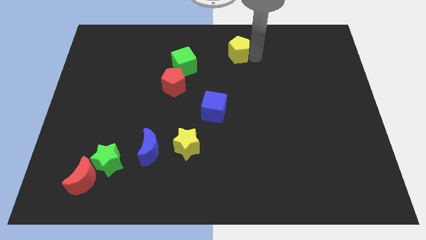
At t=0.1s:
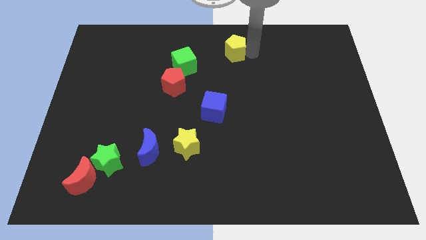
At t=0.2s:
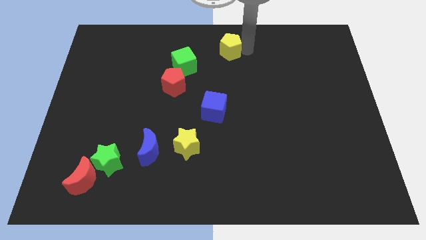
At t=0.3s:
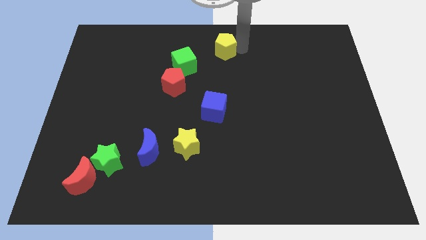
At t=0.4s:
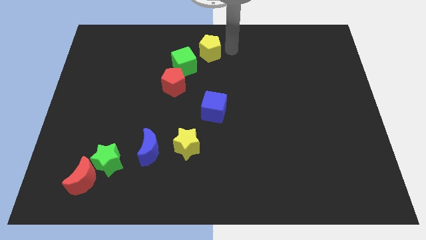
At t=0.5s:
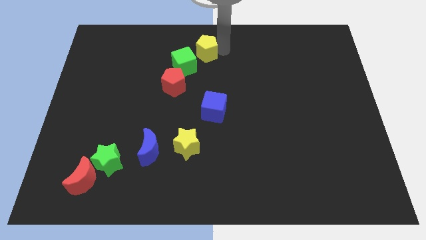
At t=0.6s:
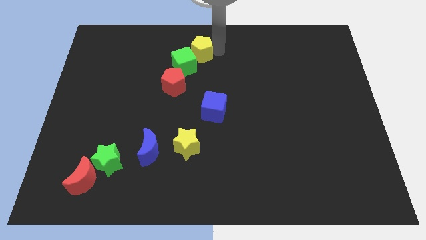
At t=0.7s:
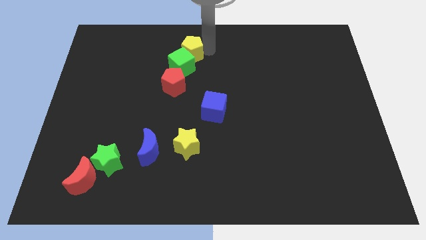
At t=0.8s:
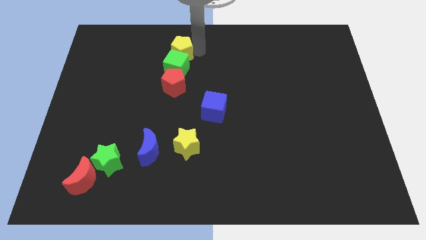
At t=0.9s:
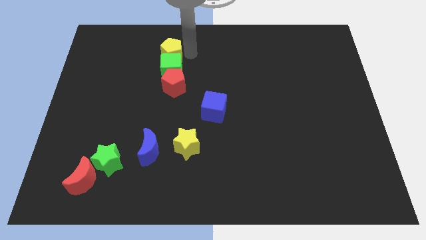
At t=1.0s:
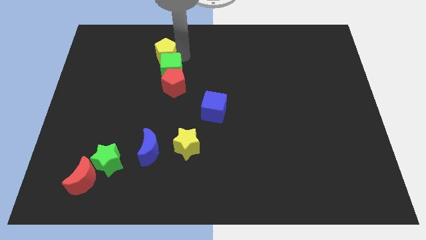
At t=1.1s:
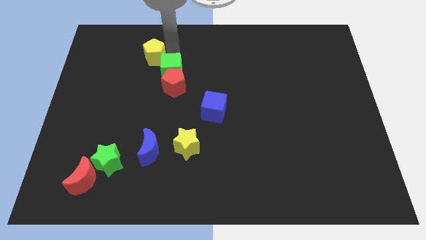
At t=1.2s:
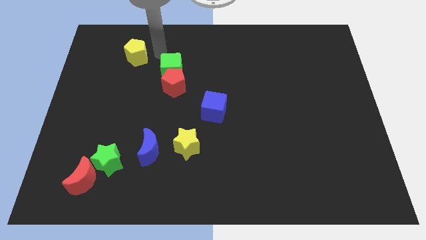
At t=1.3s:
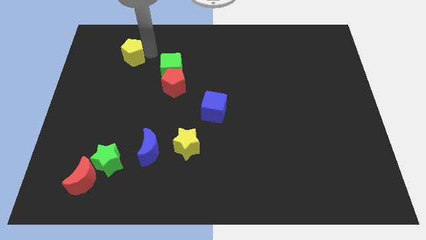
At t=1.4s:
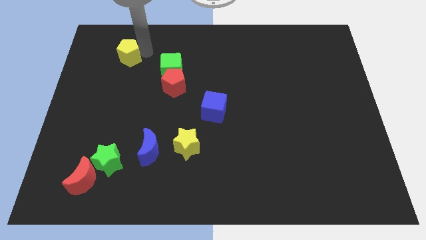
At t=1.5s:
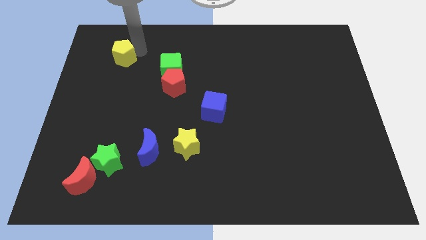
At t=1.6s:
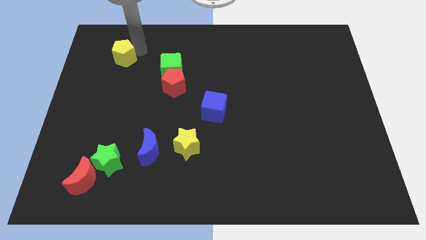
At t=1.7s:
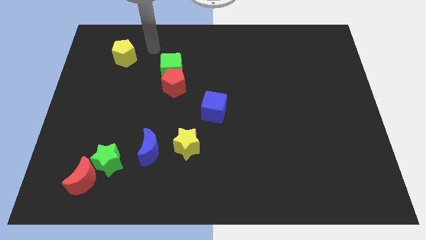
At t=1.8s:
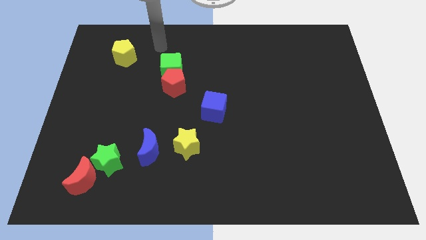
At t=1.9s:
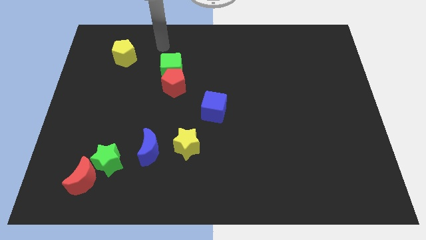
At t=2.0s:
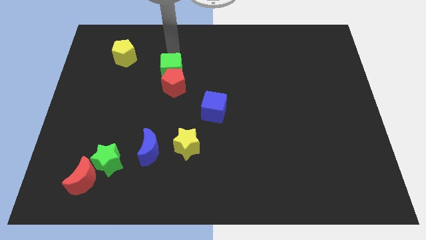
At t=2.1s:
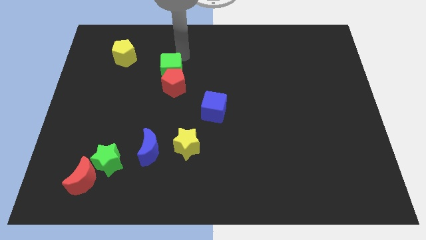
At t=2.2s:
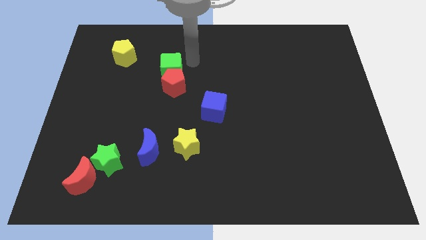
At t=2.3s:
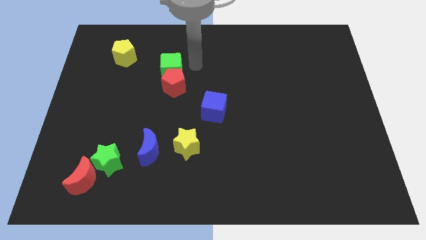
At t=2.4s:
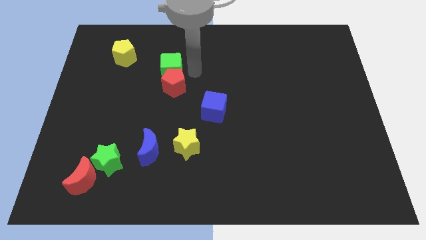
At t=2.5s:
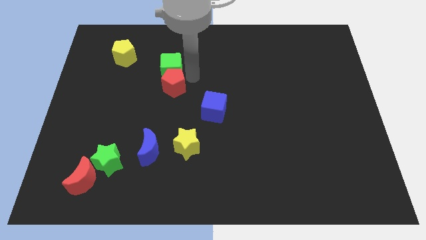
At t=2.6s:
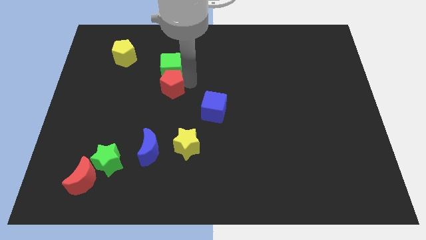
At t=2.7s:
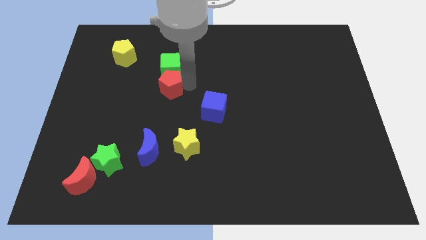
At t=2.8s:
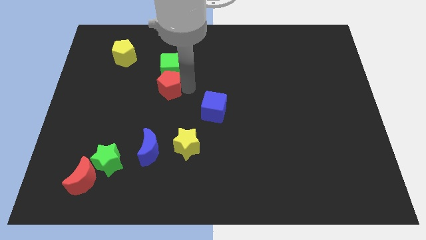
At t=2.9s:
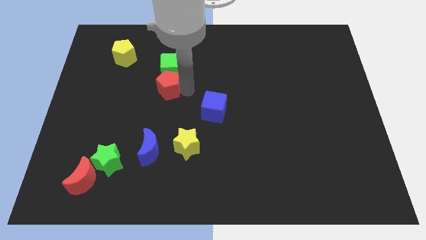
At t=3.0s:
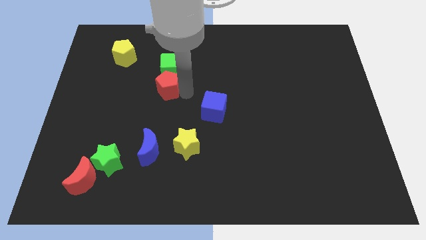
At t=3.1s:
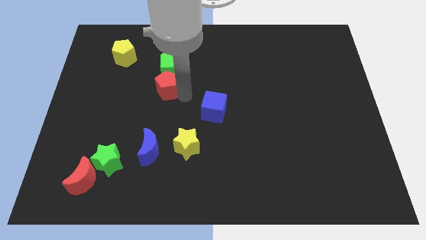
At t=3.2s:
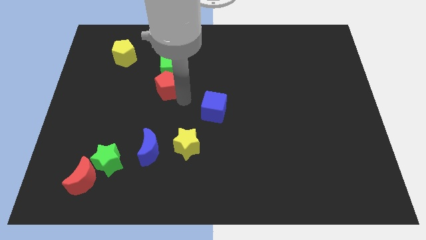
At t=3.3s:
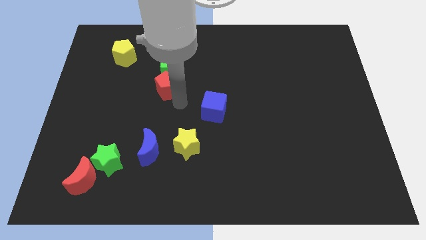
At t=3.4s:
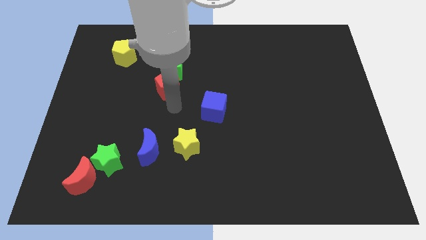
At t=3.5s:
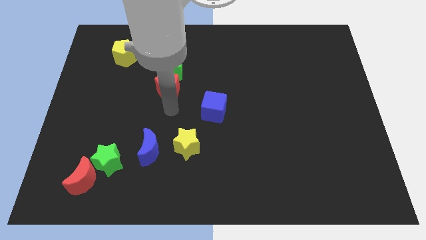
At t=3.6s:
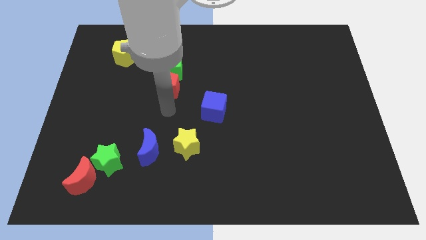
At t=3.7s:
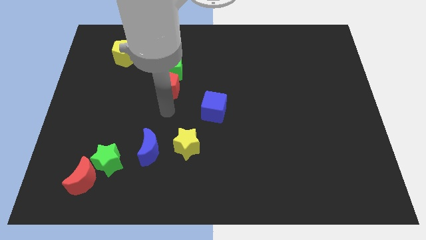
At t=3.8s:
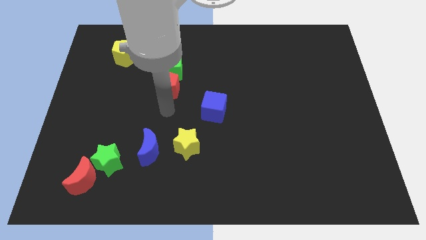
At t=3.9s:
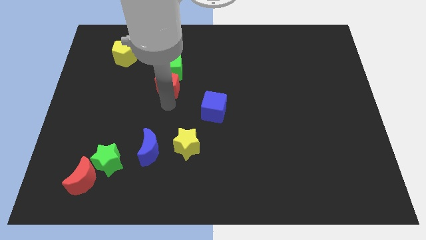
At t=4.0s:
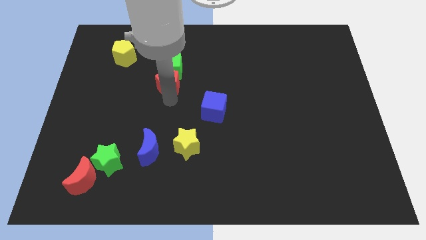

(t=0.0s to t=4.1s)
push yellow pentagon to the left side

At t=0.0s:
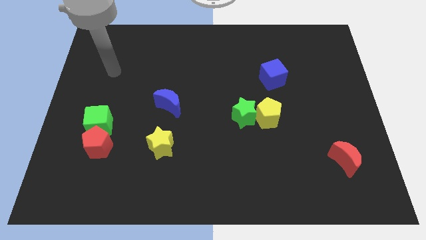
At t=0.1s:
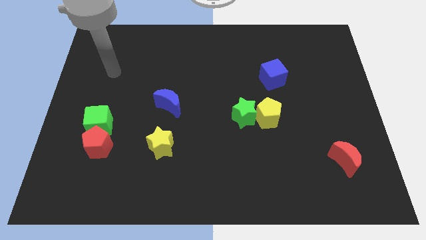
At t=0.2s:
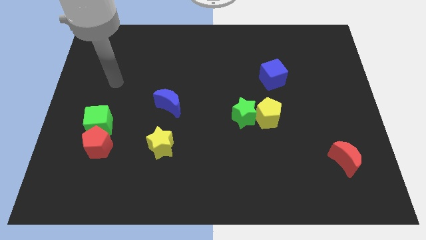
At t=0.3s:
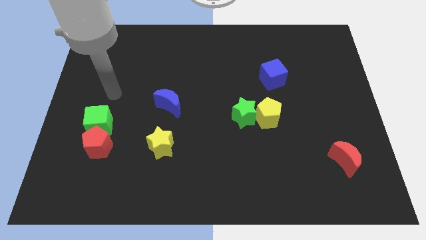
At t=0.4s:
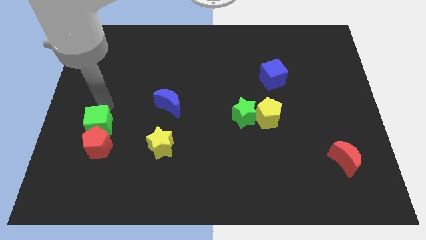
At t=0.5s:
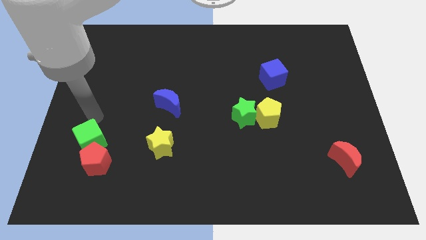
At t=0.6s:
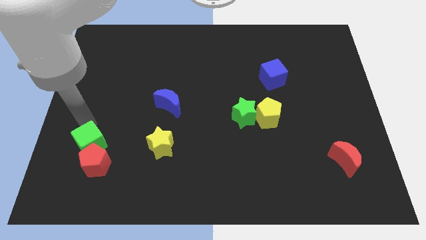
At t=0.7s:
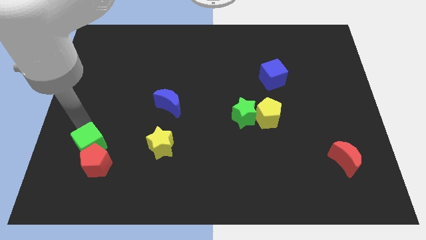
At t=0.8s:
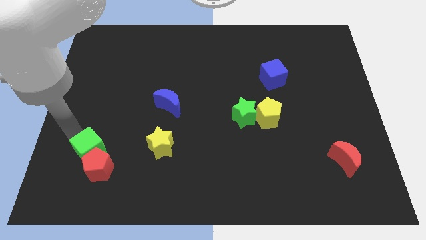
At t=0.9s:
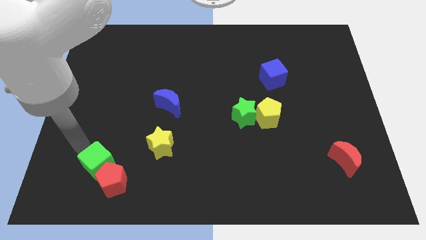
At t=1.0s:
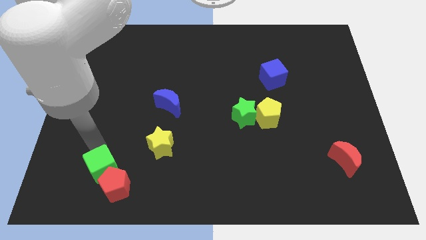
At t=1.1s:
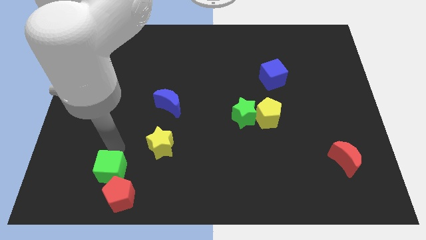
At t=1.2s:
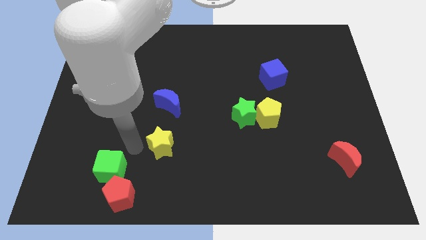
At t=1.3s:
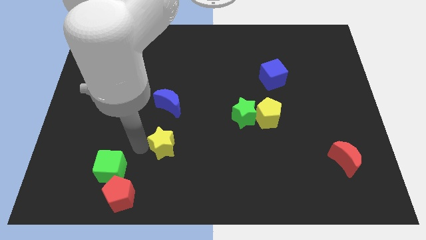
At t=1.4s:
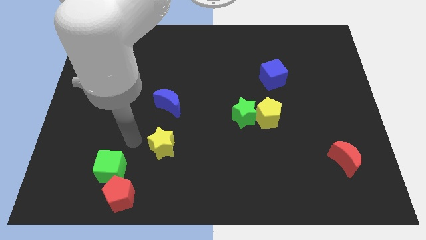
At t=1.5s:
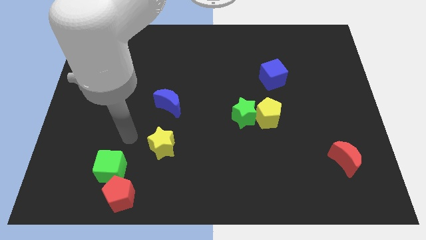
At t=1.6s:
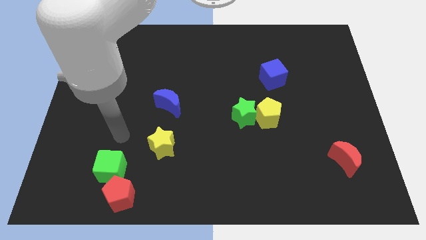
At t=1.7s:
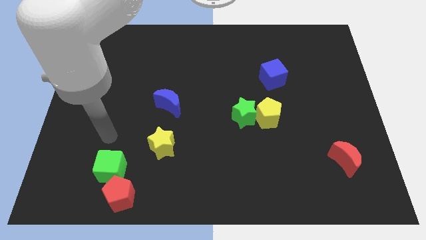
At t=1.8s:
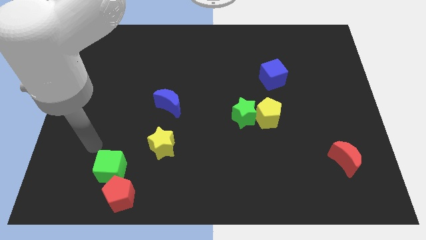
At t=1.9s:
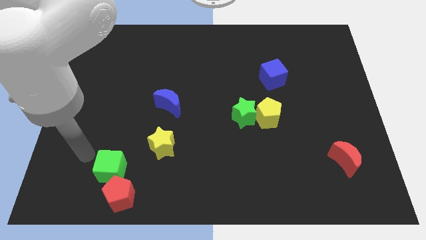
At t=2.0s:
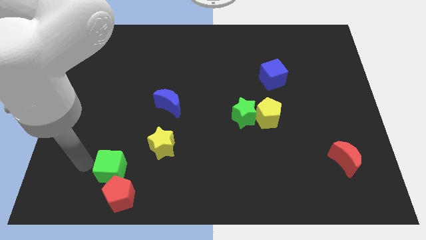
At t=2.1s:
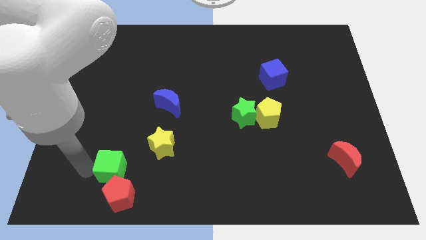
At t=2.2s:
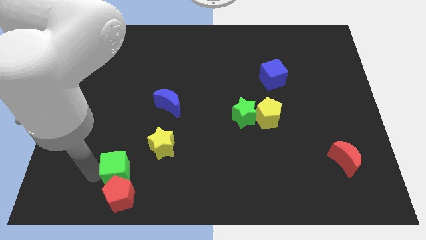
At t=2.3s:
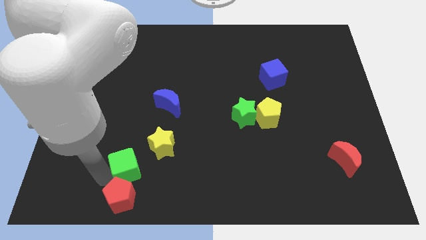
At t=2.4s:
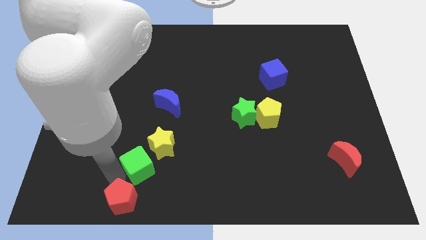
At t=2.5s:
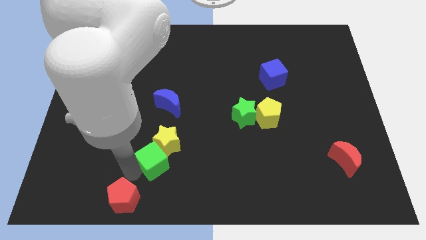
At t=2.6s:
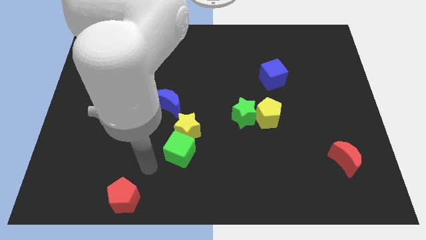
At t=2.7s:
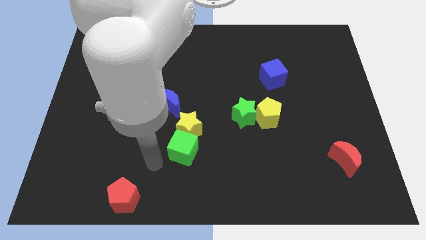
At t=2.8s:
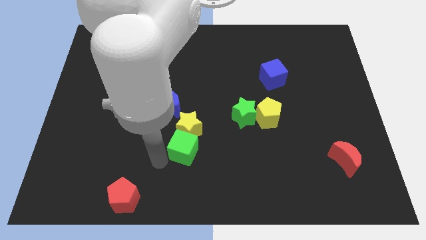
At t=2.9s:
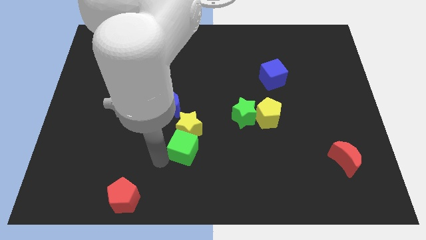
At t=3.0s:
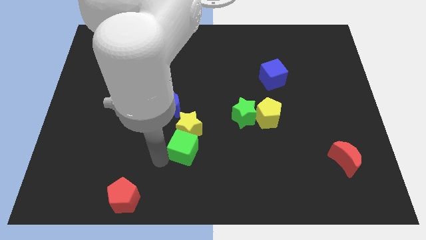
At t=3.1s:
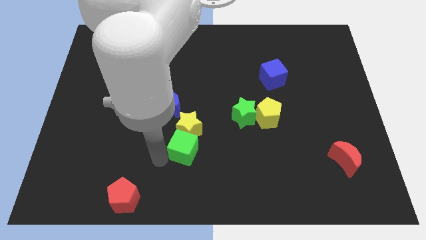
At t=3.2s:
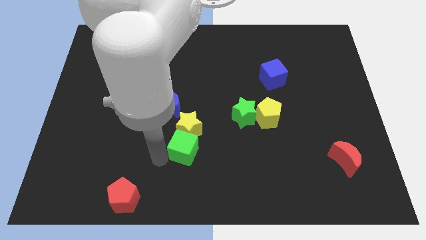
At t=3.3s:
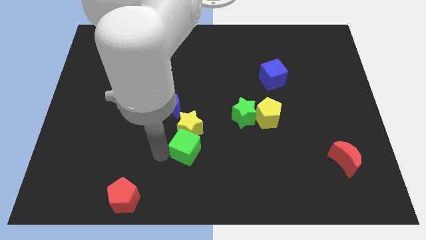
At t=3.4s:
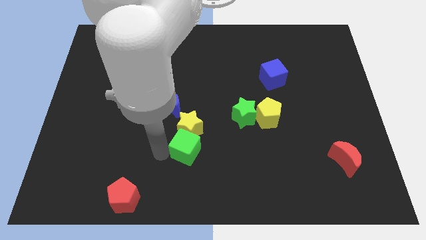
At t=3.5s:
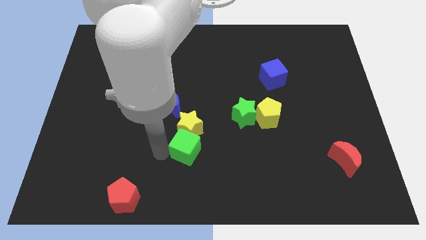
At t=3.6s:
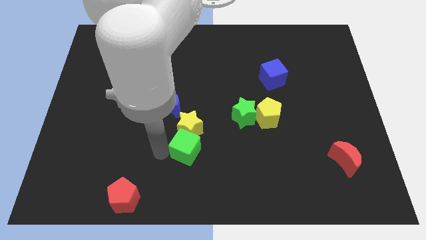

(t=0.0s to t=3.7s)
push the green cube yellow star and green cube in different directions

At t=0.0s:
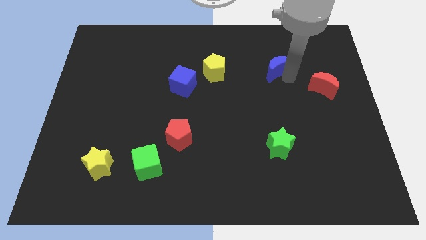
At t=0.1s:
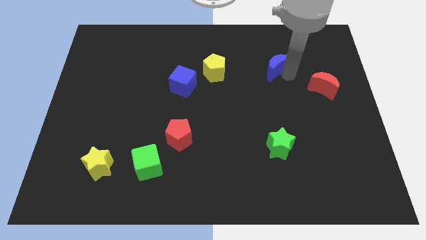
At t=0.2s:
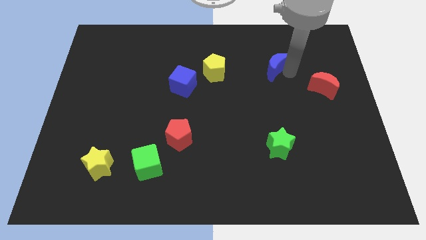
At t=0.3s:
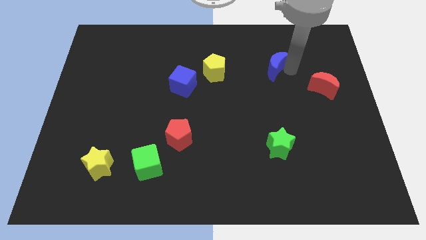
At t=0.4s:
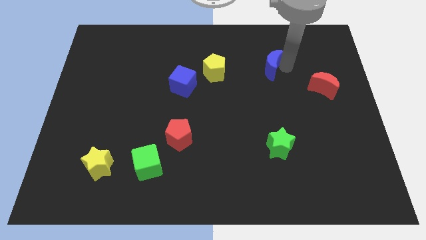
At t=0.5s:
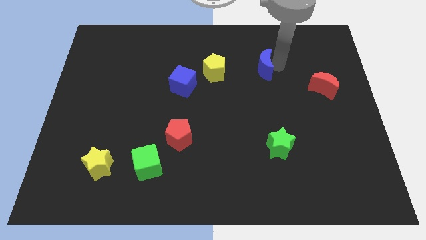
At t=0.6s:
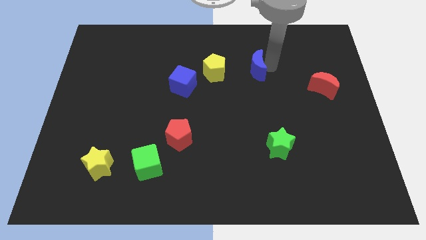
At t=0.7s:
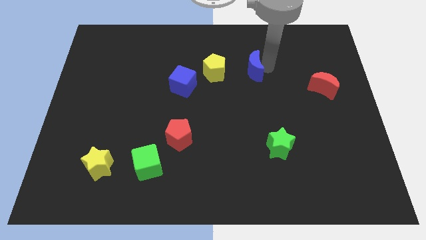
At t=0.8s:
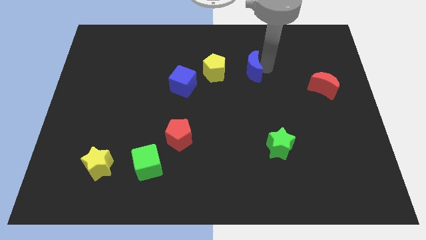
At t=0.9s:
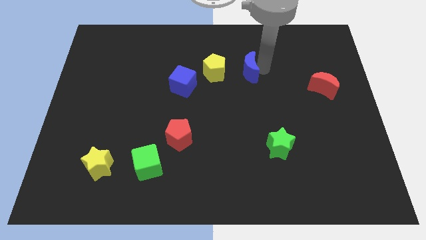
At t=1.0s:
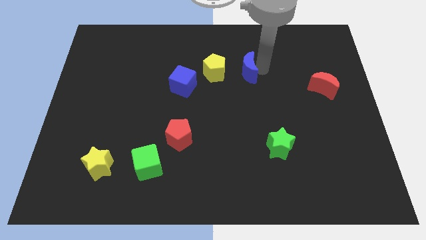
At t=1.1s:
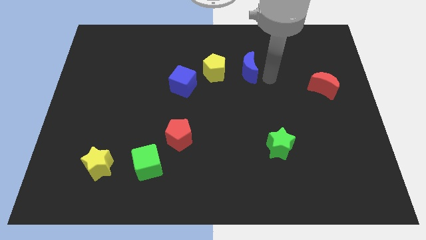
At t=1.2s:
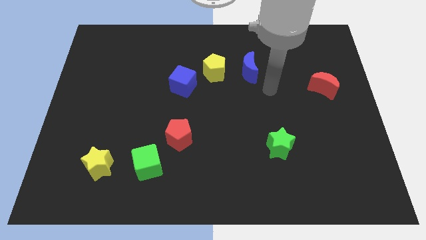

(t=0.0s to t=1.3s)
move the blue crescent towards the yellow pentagon
